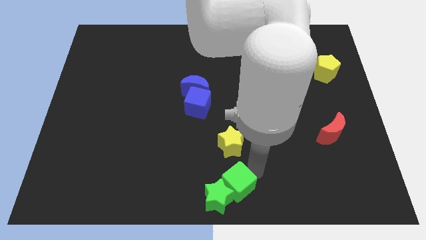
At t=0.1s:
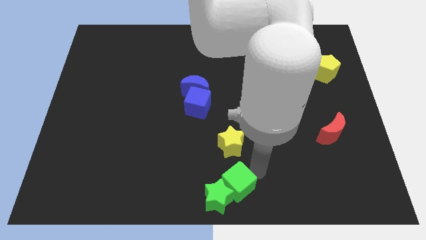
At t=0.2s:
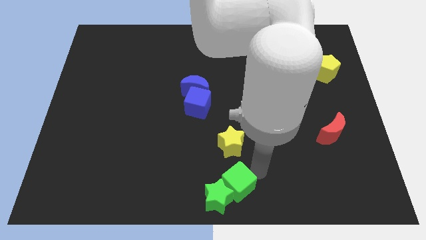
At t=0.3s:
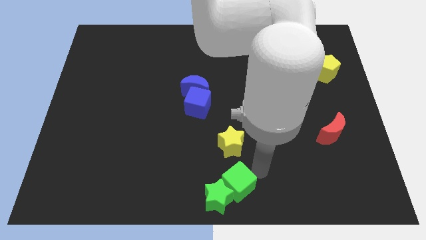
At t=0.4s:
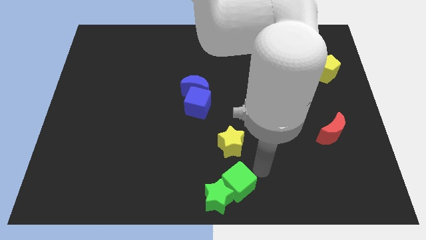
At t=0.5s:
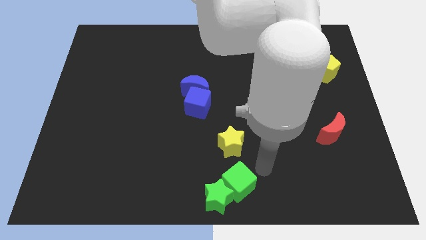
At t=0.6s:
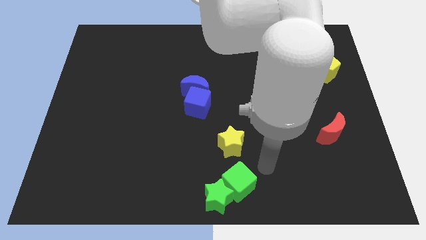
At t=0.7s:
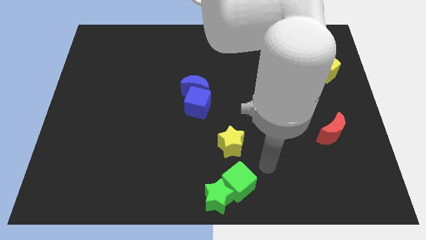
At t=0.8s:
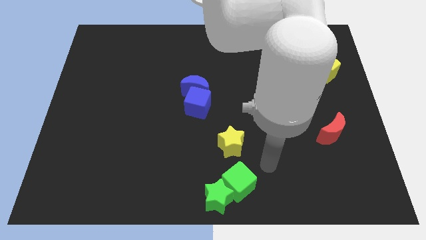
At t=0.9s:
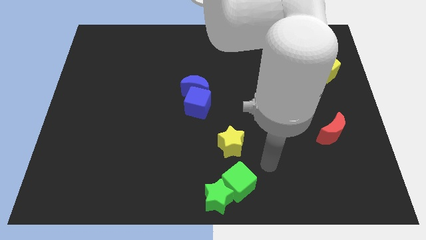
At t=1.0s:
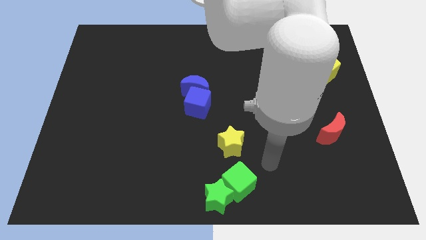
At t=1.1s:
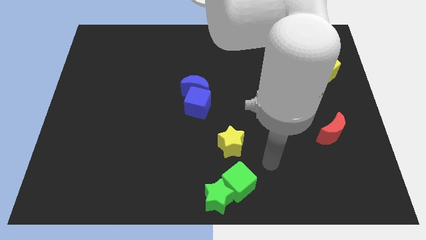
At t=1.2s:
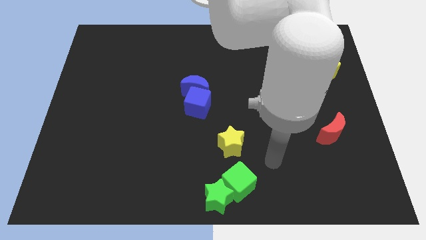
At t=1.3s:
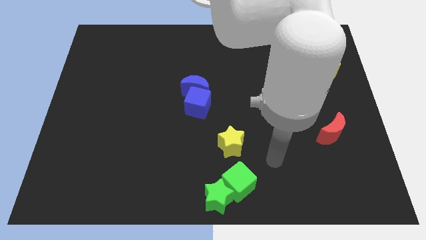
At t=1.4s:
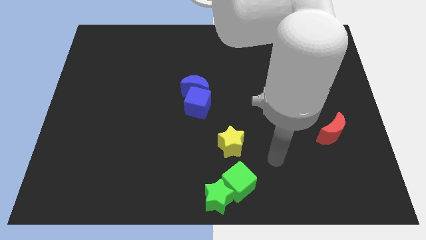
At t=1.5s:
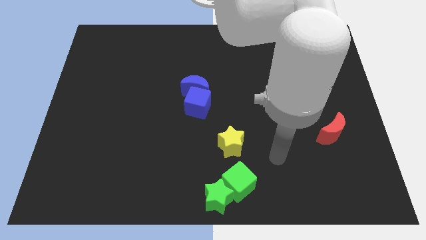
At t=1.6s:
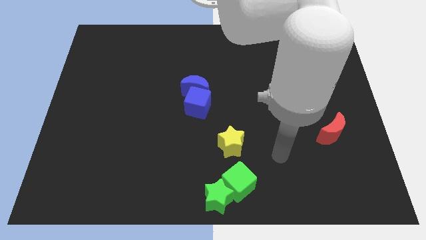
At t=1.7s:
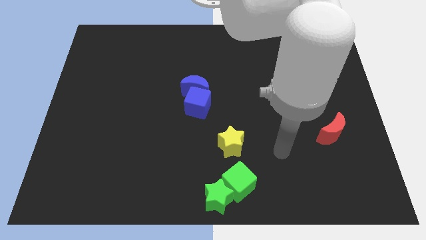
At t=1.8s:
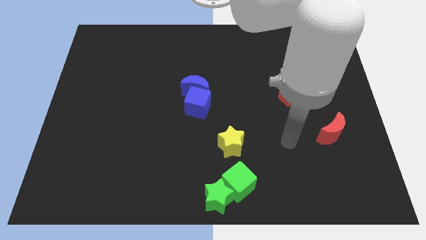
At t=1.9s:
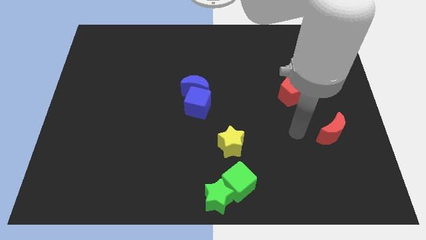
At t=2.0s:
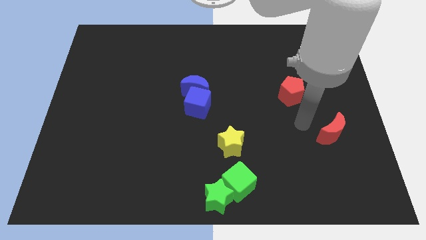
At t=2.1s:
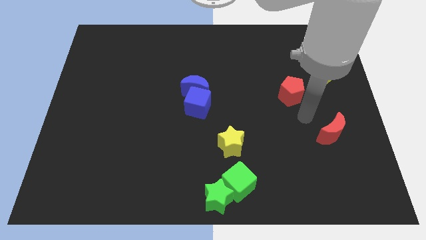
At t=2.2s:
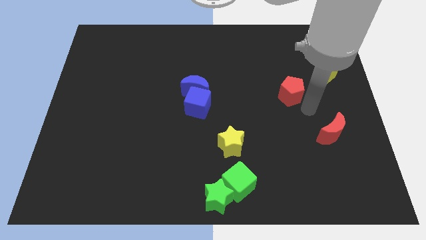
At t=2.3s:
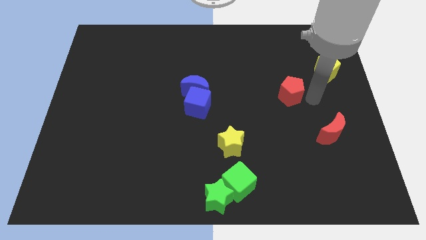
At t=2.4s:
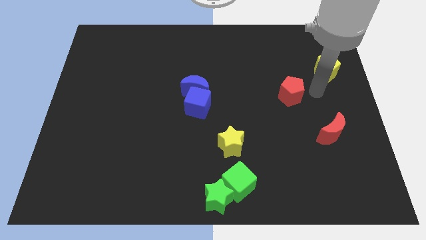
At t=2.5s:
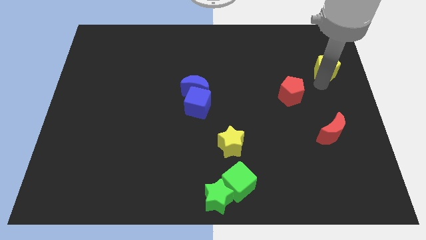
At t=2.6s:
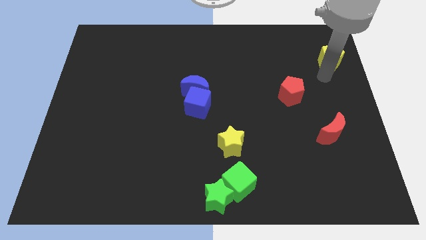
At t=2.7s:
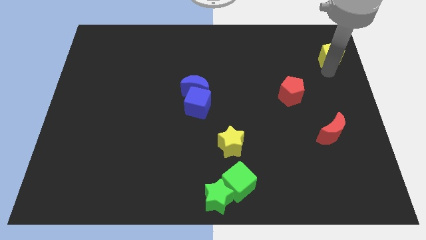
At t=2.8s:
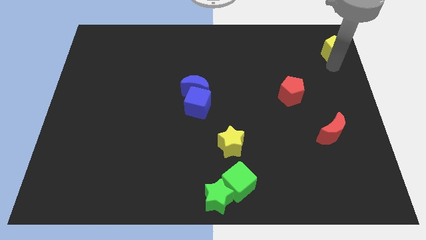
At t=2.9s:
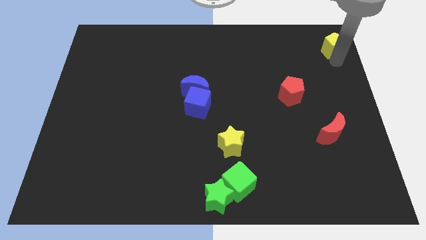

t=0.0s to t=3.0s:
go near yellow pentagon

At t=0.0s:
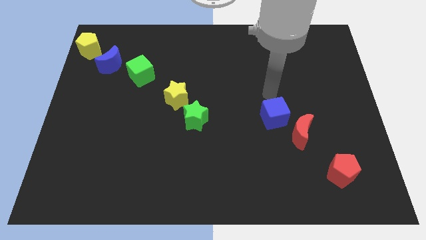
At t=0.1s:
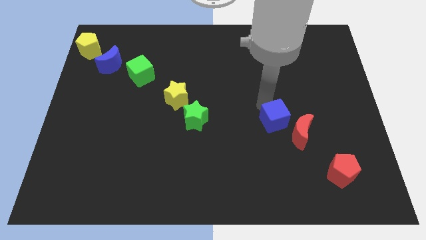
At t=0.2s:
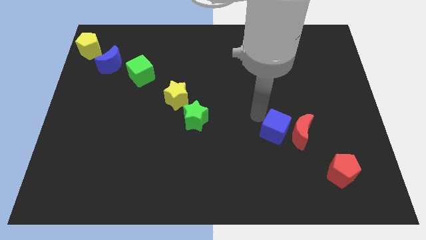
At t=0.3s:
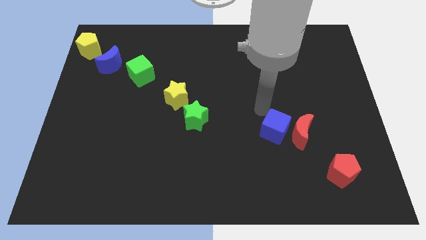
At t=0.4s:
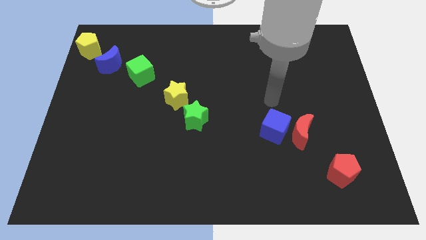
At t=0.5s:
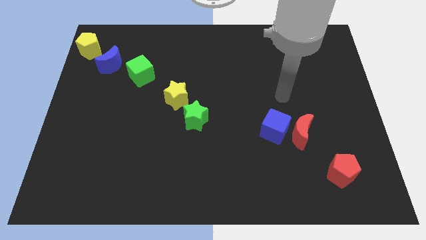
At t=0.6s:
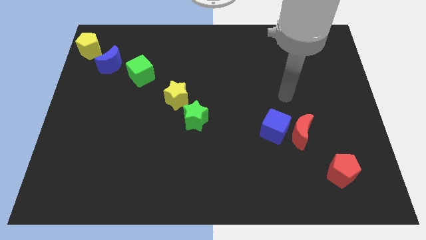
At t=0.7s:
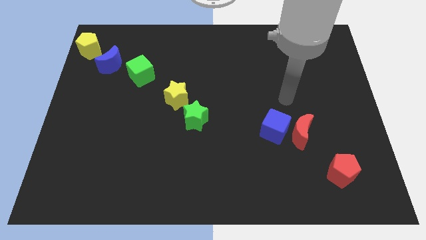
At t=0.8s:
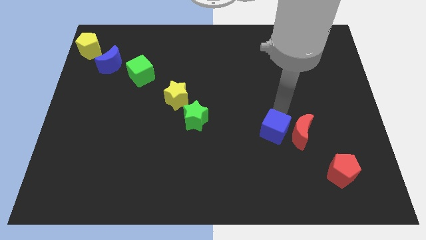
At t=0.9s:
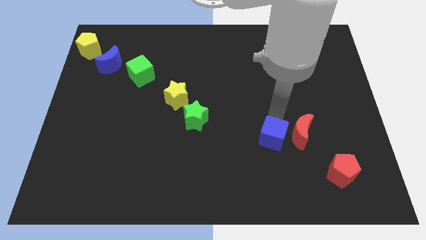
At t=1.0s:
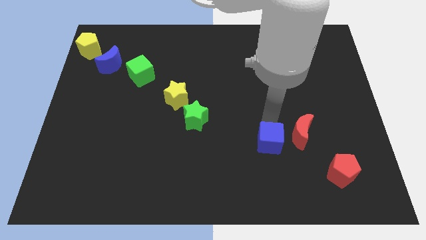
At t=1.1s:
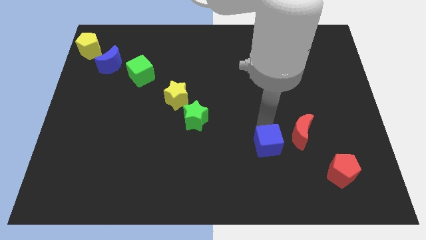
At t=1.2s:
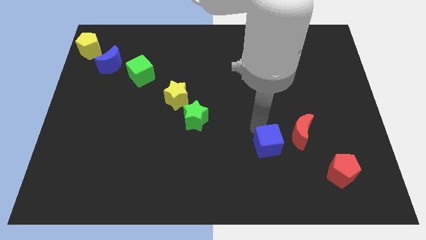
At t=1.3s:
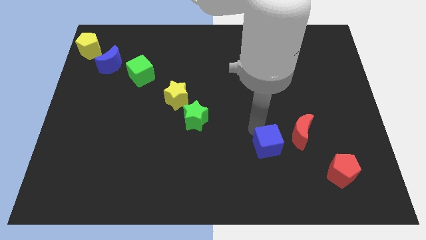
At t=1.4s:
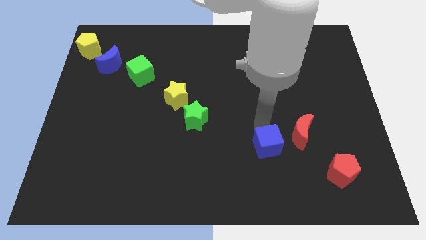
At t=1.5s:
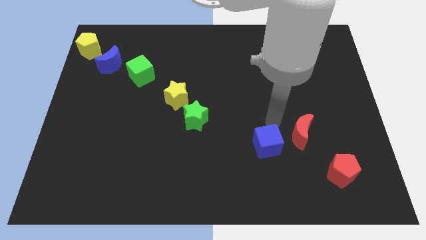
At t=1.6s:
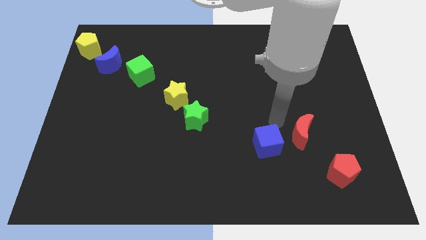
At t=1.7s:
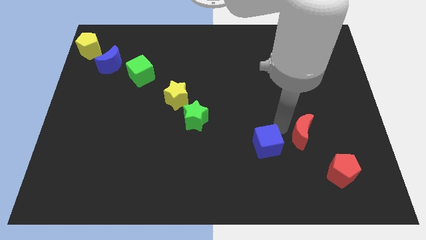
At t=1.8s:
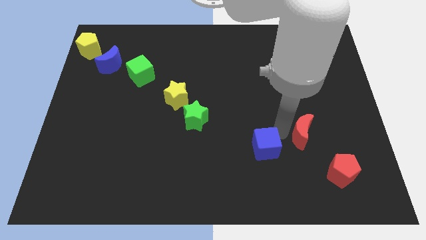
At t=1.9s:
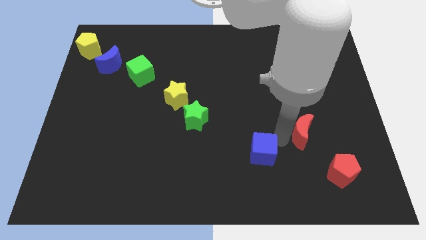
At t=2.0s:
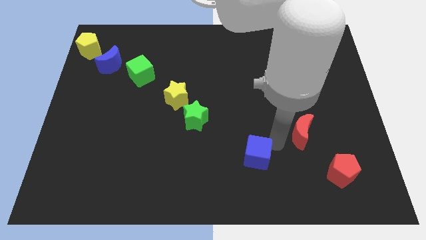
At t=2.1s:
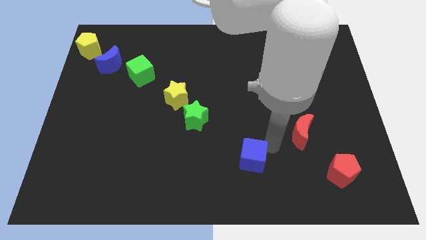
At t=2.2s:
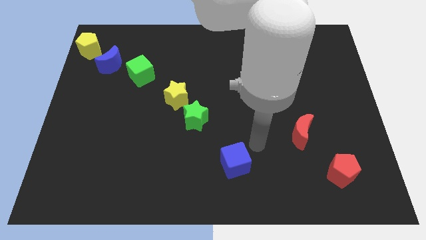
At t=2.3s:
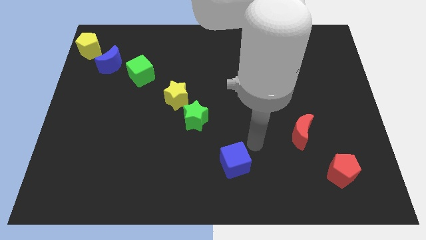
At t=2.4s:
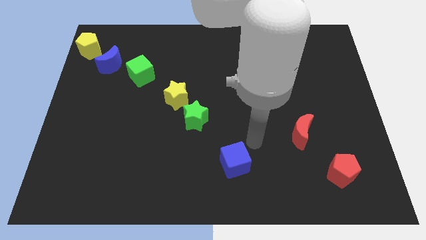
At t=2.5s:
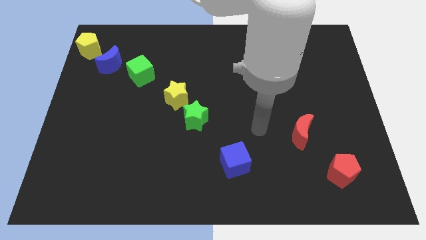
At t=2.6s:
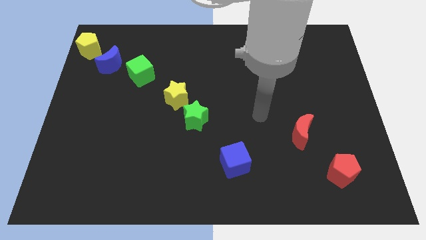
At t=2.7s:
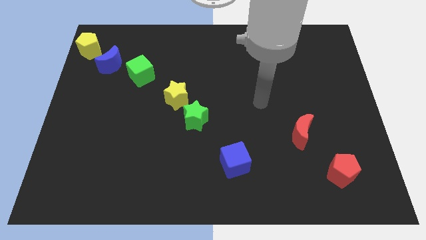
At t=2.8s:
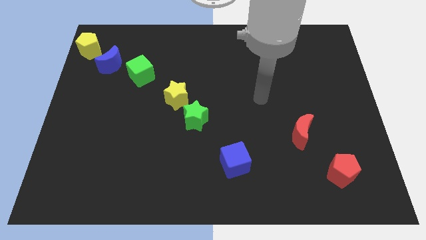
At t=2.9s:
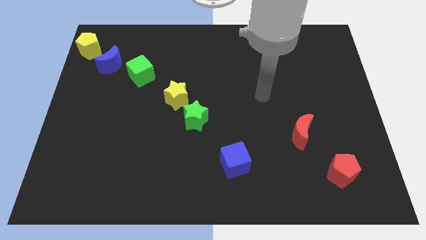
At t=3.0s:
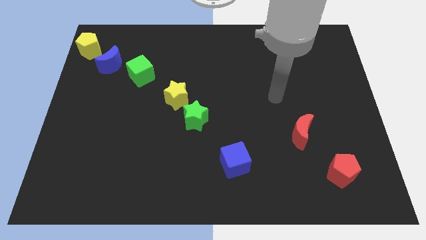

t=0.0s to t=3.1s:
place the blue cube near the bottom center of the board

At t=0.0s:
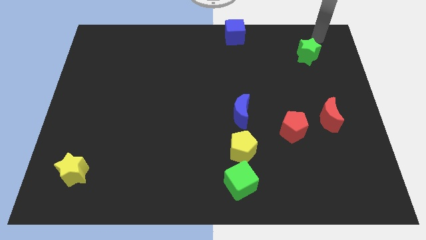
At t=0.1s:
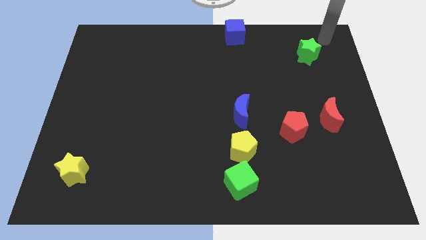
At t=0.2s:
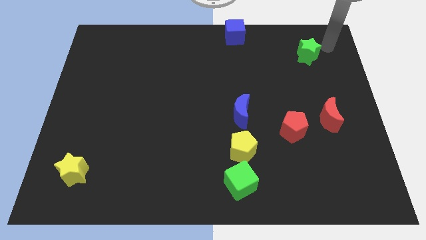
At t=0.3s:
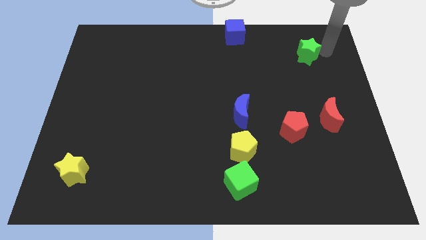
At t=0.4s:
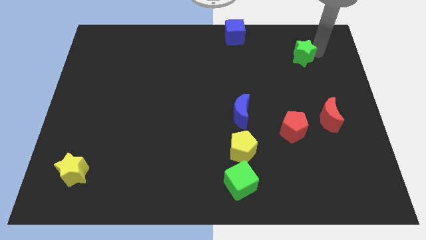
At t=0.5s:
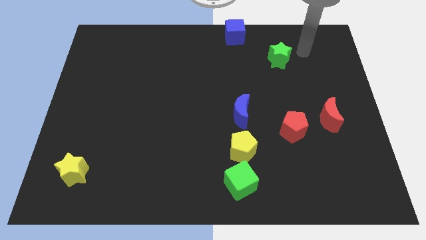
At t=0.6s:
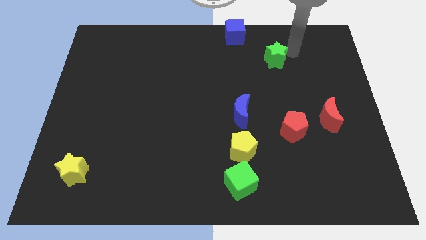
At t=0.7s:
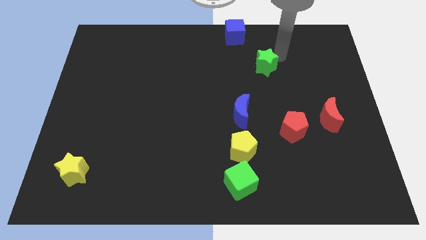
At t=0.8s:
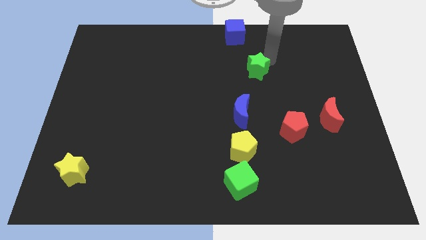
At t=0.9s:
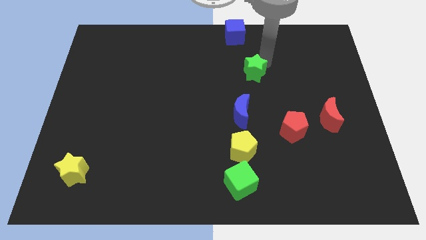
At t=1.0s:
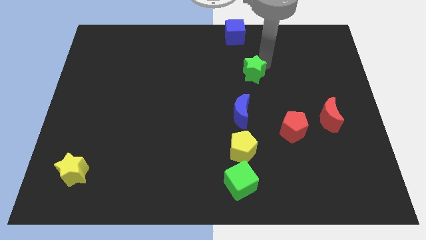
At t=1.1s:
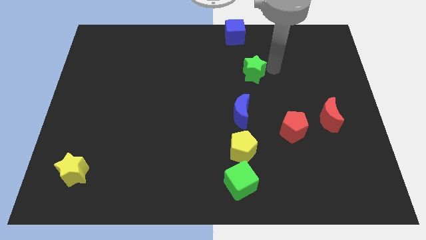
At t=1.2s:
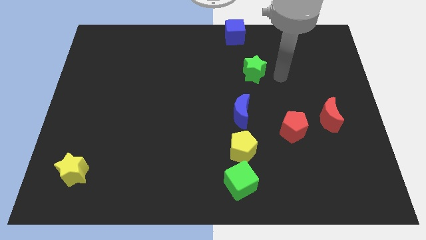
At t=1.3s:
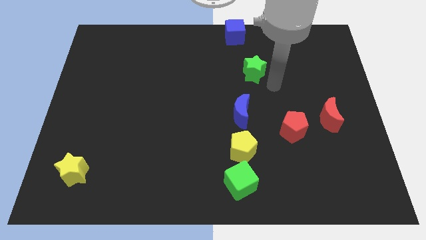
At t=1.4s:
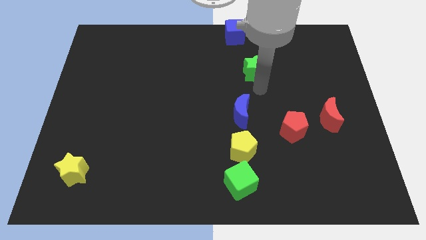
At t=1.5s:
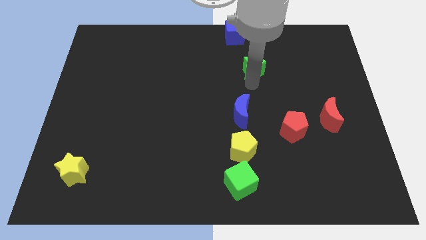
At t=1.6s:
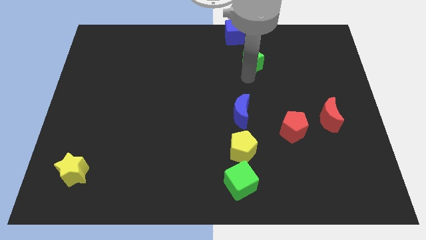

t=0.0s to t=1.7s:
slide the green star above the blue moon

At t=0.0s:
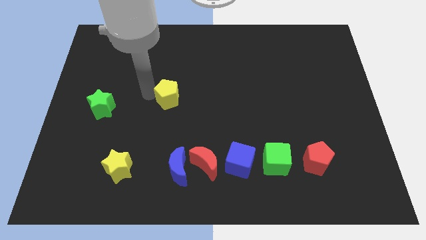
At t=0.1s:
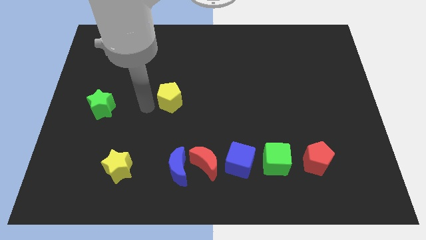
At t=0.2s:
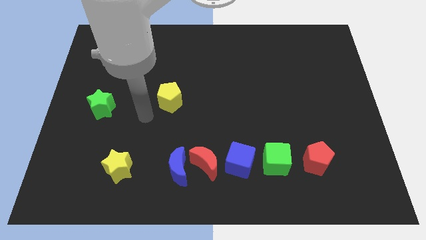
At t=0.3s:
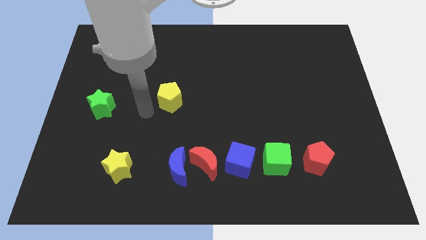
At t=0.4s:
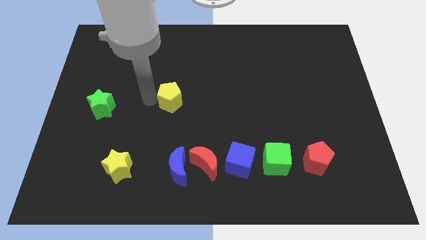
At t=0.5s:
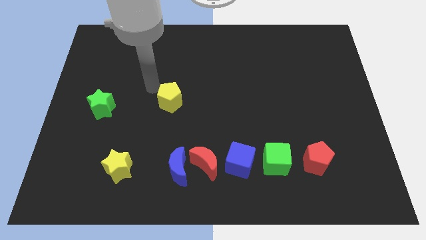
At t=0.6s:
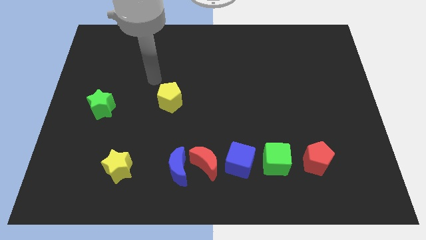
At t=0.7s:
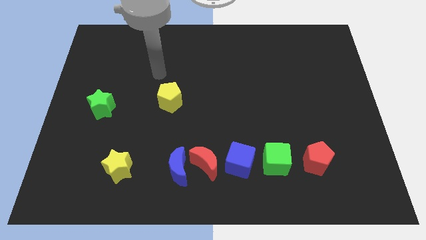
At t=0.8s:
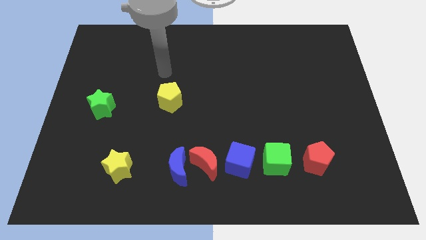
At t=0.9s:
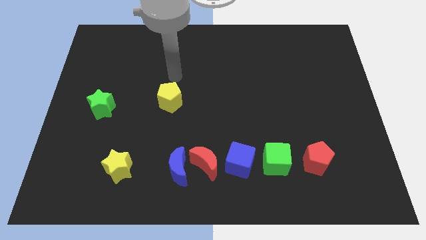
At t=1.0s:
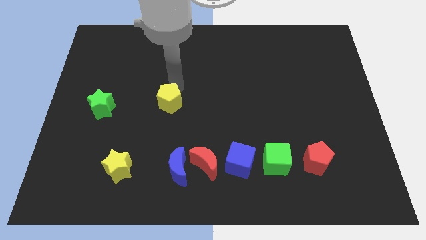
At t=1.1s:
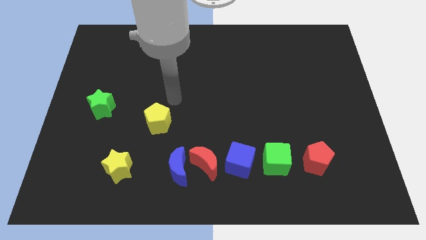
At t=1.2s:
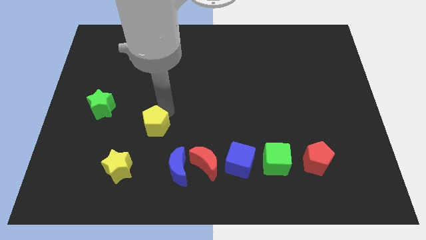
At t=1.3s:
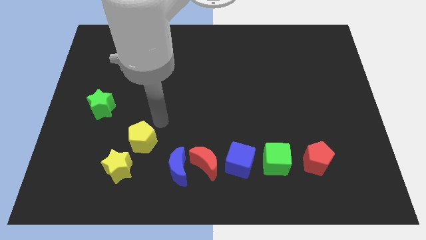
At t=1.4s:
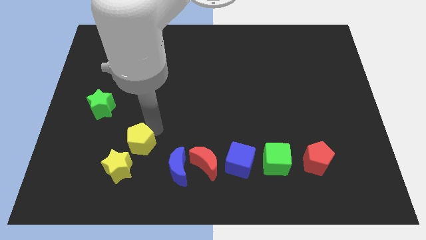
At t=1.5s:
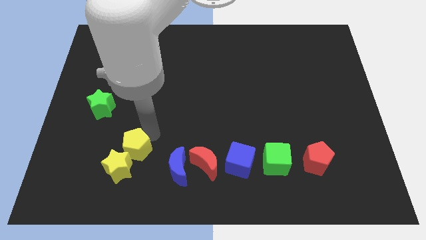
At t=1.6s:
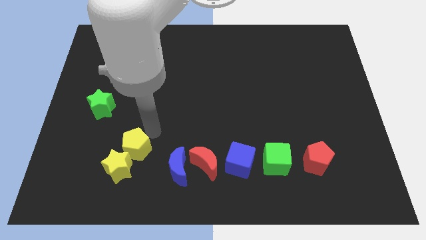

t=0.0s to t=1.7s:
place the yellow pentagon diagonally top right to the yellow star
